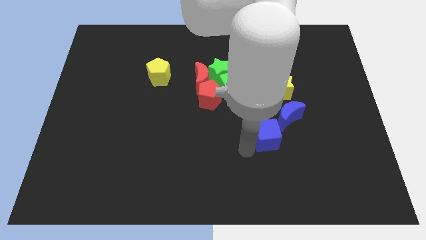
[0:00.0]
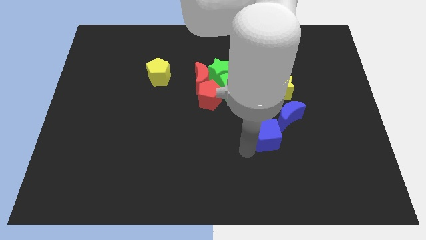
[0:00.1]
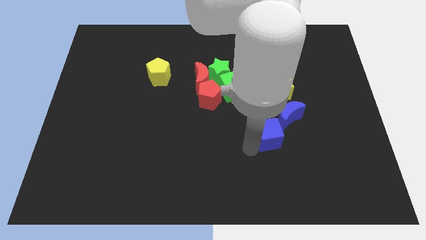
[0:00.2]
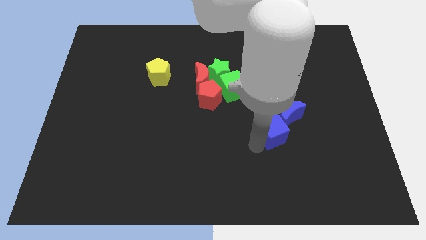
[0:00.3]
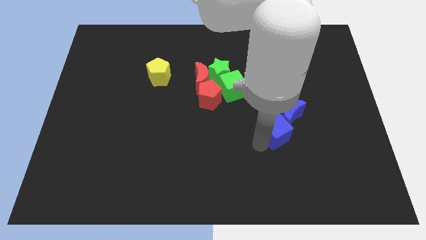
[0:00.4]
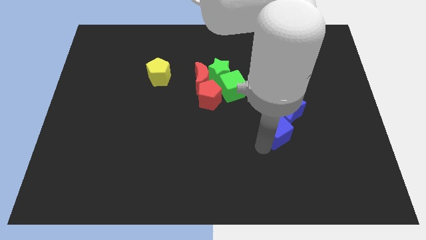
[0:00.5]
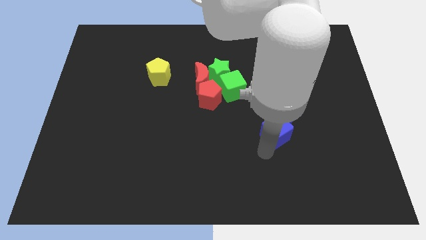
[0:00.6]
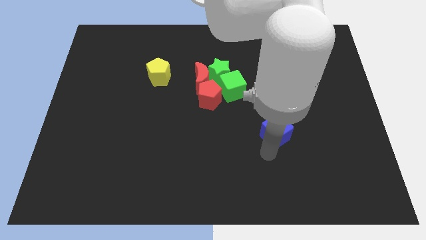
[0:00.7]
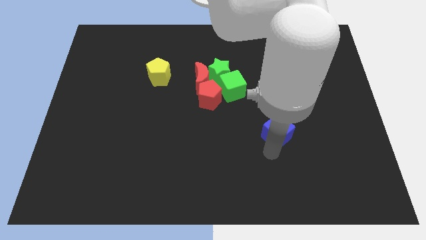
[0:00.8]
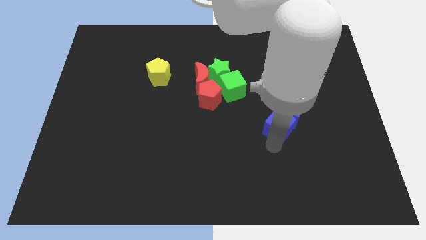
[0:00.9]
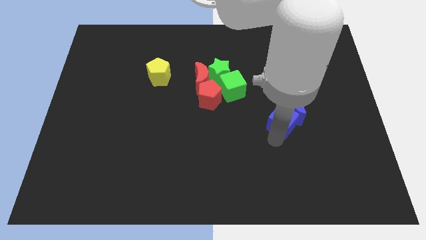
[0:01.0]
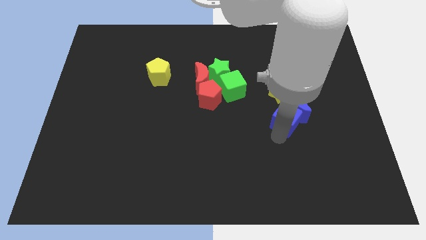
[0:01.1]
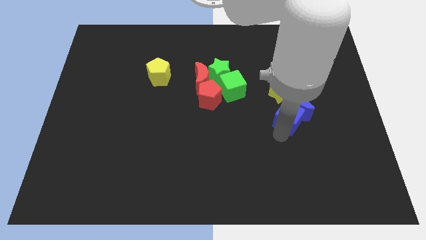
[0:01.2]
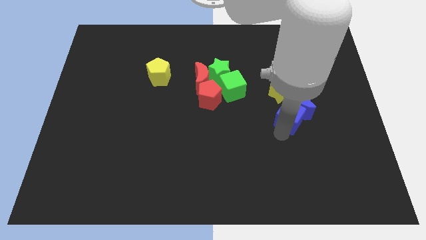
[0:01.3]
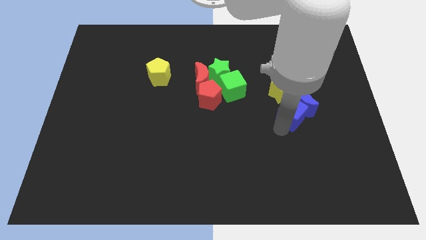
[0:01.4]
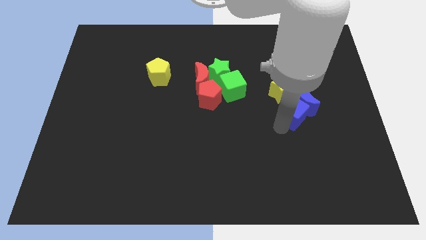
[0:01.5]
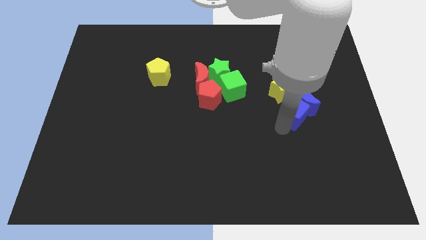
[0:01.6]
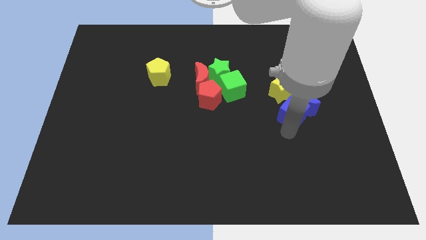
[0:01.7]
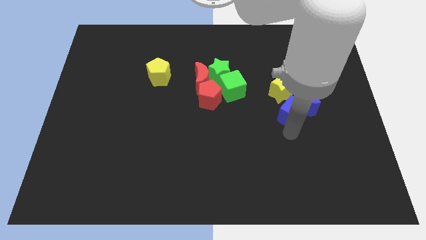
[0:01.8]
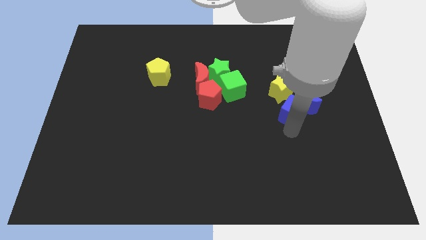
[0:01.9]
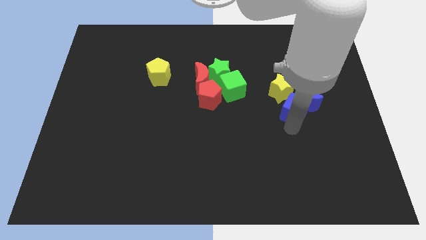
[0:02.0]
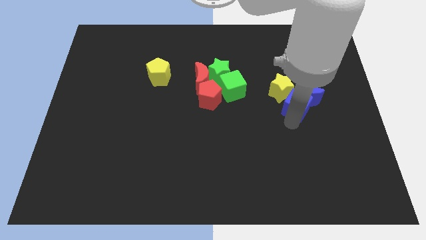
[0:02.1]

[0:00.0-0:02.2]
push the blue cube below the blue moon at the center right corner

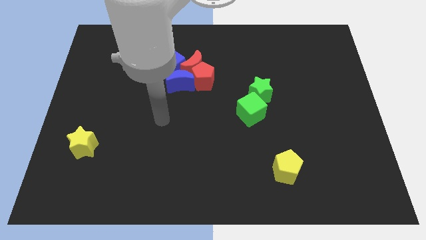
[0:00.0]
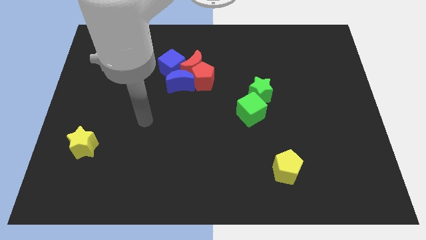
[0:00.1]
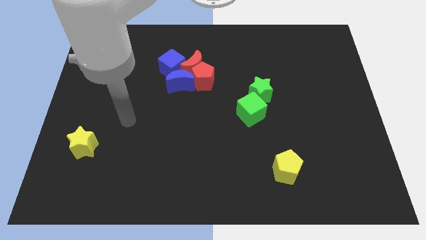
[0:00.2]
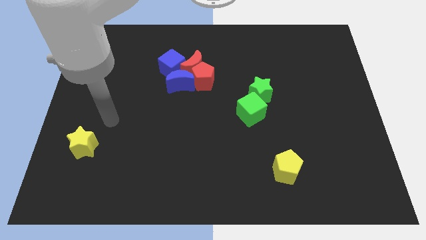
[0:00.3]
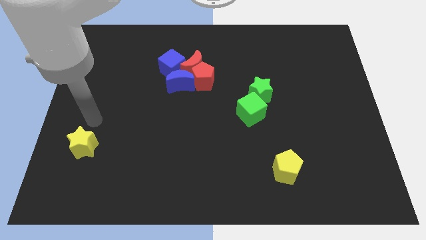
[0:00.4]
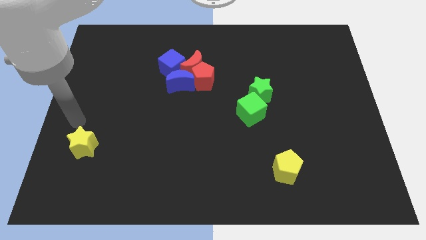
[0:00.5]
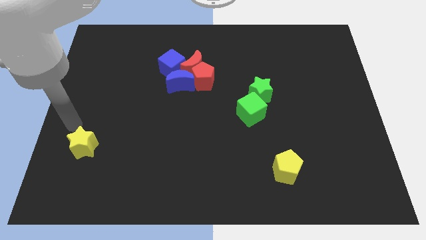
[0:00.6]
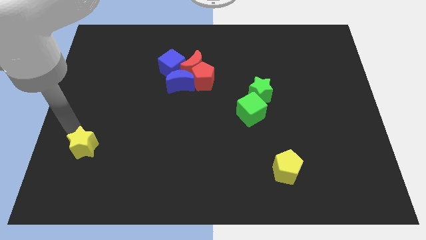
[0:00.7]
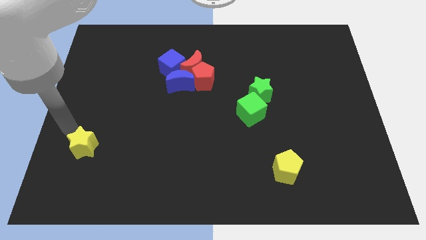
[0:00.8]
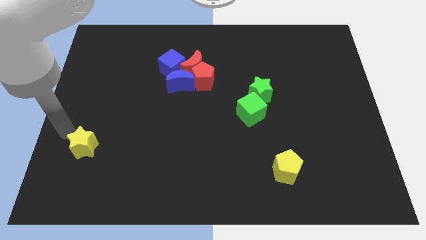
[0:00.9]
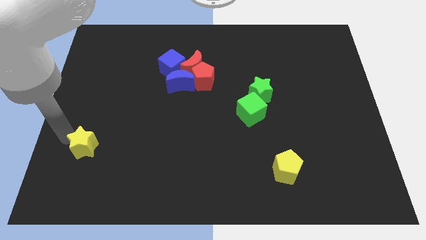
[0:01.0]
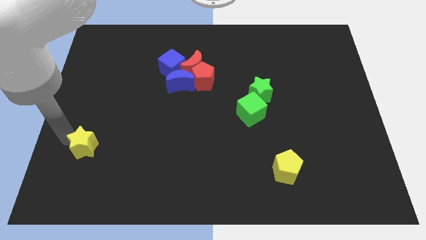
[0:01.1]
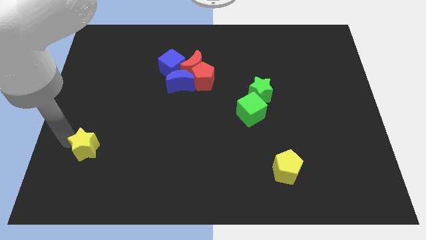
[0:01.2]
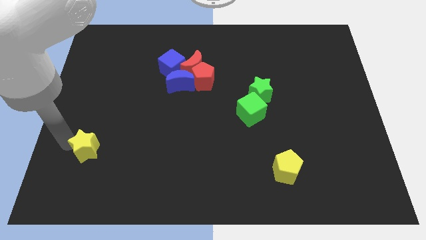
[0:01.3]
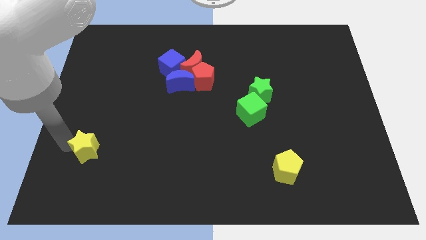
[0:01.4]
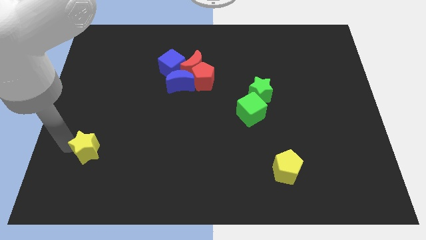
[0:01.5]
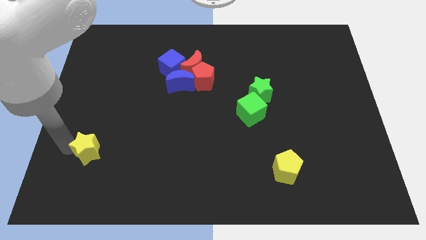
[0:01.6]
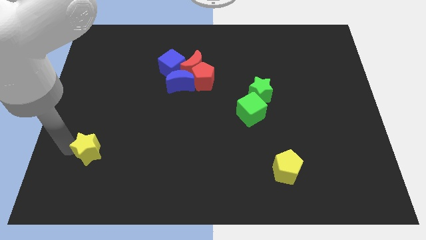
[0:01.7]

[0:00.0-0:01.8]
move the yellow star slightly to the bottom

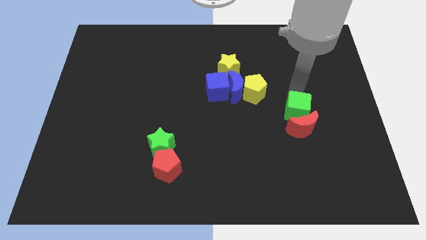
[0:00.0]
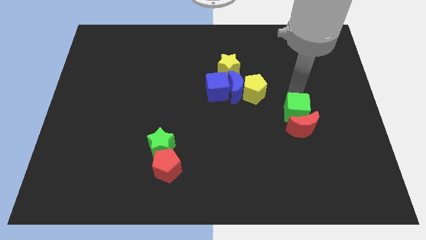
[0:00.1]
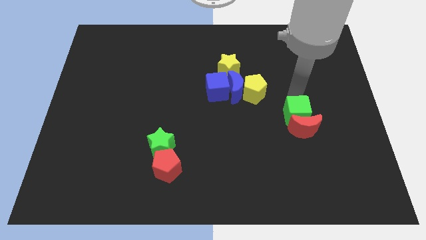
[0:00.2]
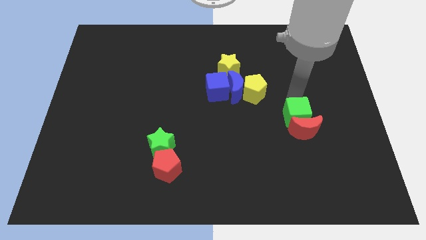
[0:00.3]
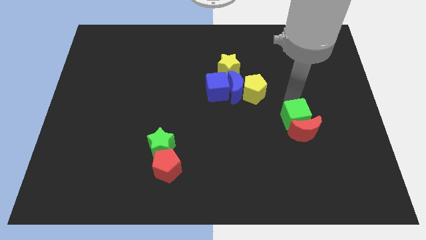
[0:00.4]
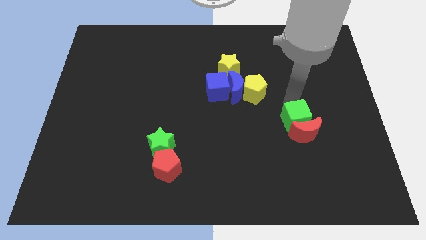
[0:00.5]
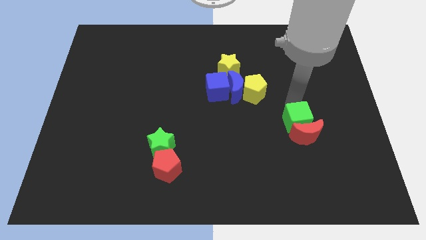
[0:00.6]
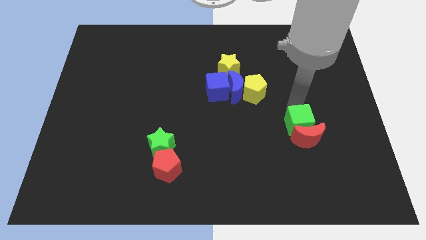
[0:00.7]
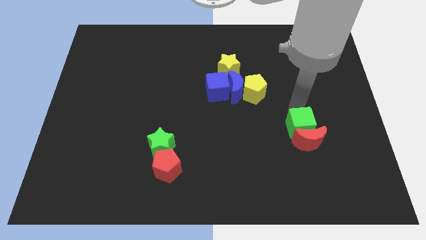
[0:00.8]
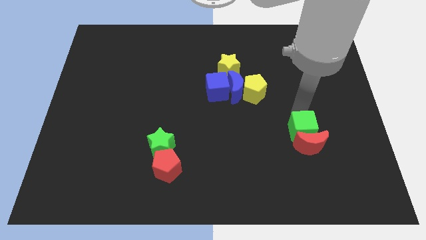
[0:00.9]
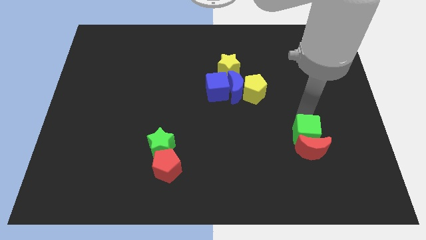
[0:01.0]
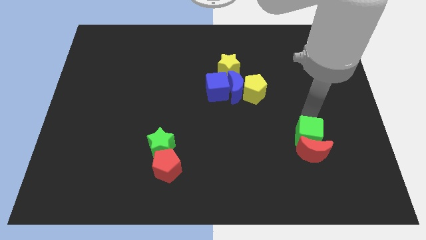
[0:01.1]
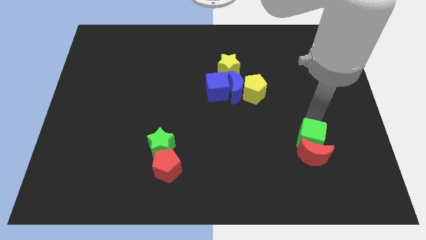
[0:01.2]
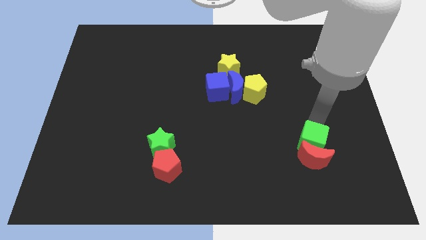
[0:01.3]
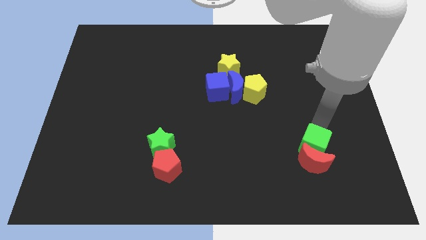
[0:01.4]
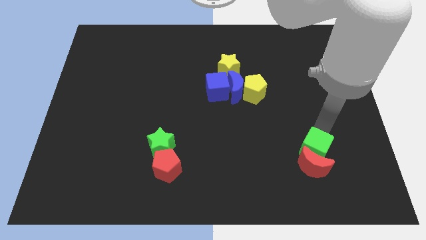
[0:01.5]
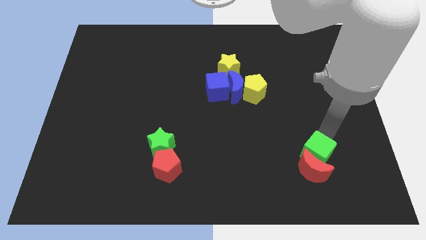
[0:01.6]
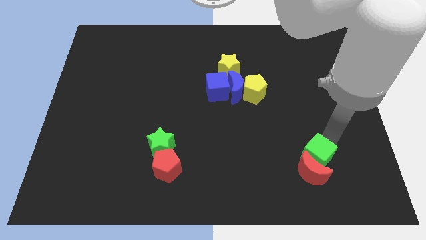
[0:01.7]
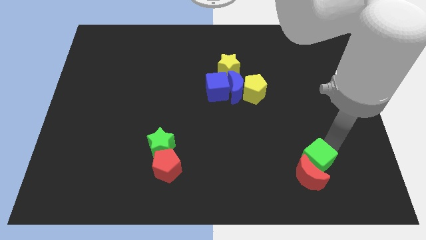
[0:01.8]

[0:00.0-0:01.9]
push the green cube along with red crescent towards bottom of the board

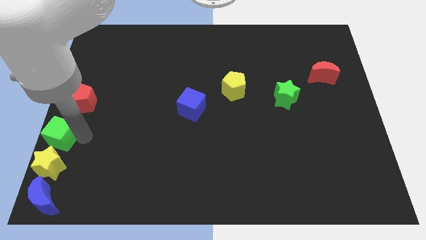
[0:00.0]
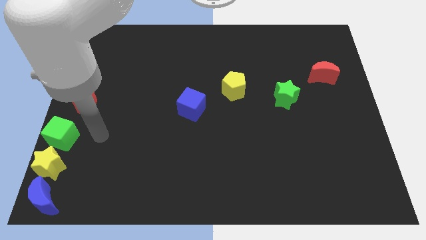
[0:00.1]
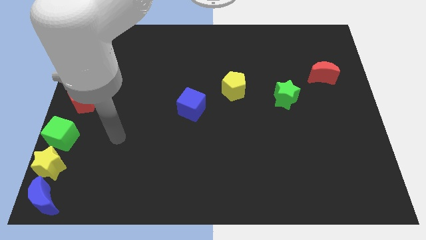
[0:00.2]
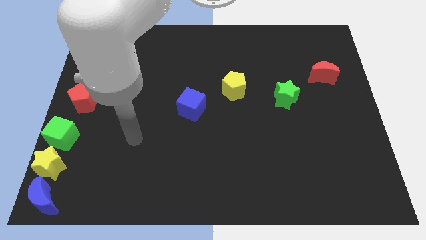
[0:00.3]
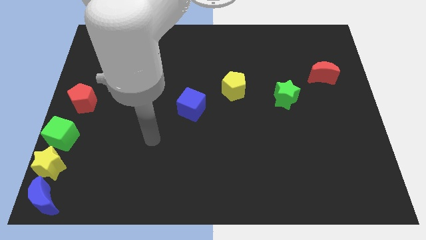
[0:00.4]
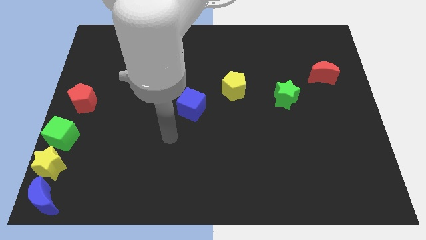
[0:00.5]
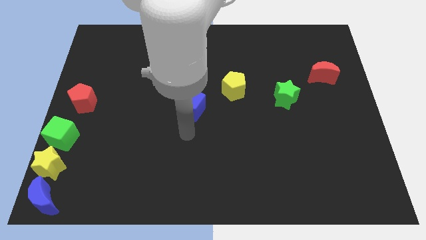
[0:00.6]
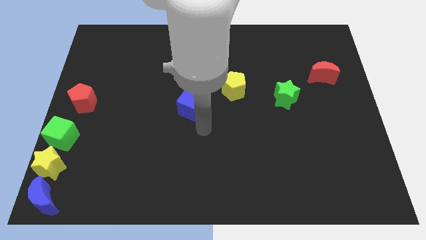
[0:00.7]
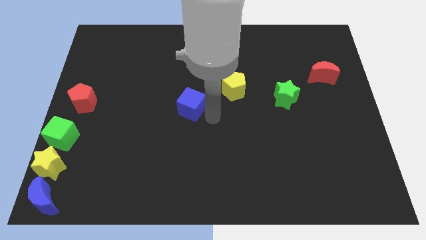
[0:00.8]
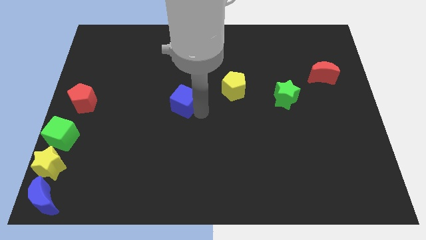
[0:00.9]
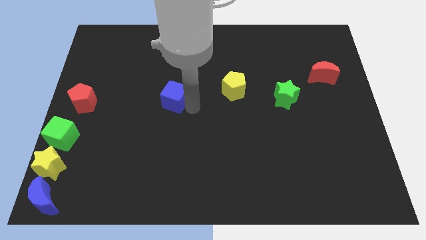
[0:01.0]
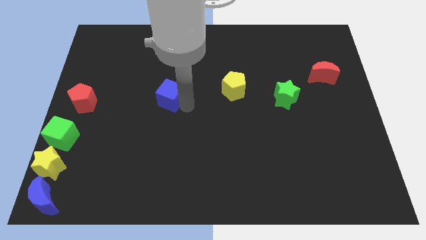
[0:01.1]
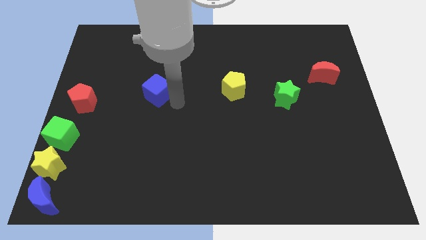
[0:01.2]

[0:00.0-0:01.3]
place the blue cube in between the yellow and red pentagons

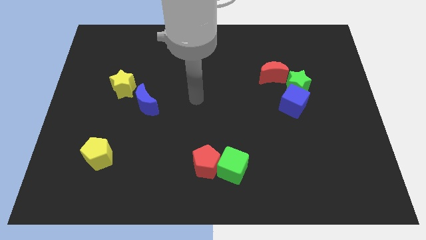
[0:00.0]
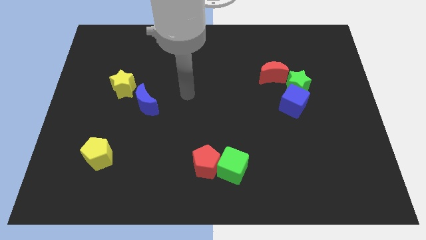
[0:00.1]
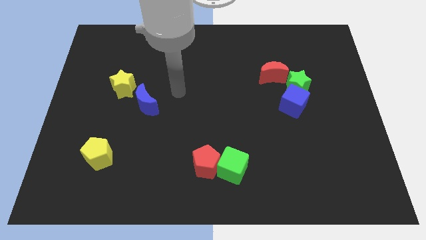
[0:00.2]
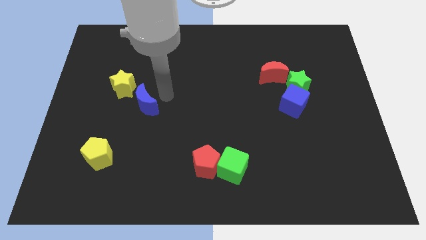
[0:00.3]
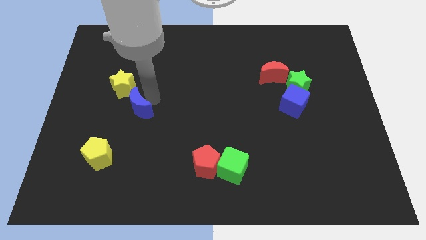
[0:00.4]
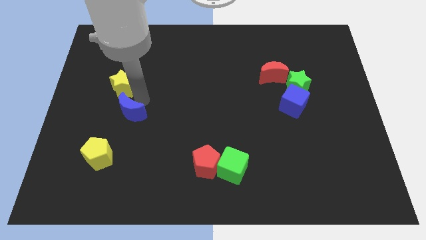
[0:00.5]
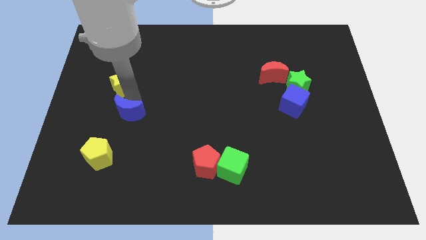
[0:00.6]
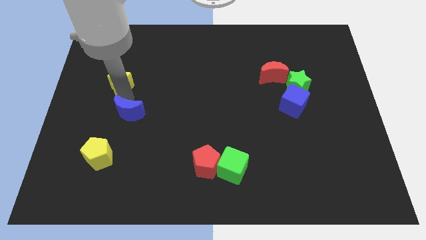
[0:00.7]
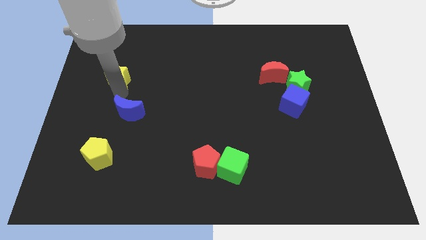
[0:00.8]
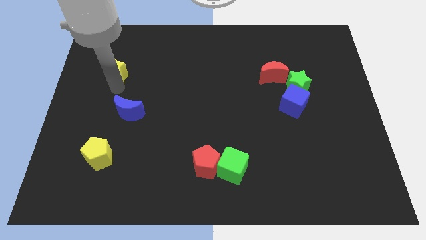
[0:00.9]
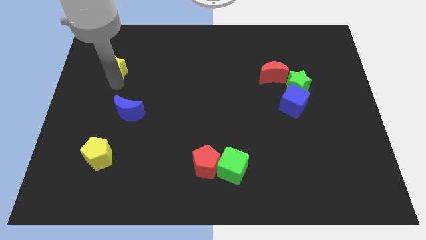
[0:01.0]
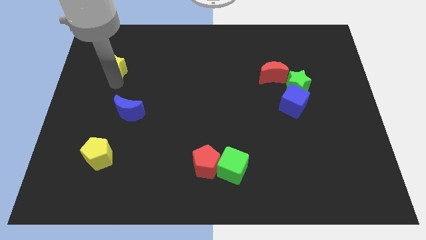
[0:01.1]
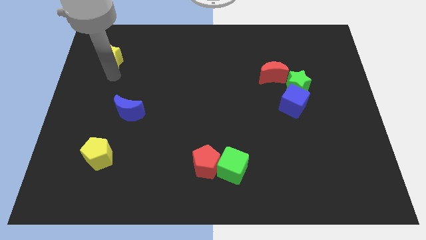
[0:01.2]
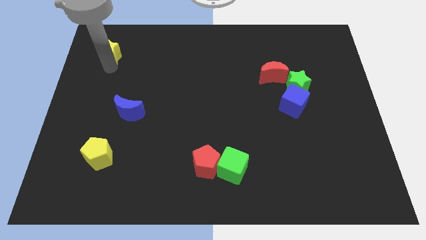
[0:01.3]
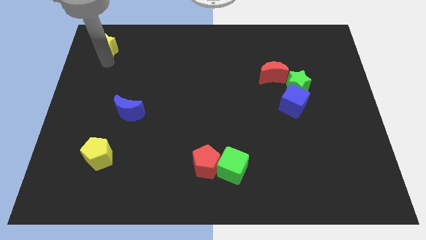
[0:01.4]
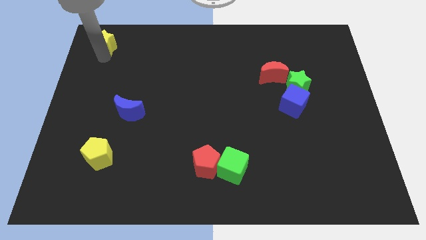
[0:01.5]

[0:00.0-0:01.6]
separate the yellow star from blue crescent
